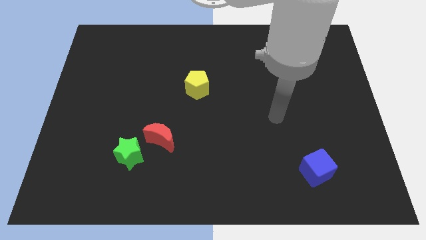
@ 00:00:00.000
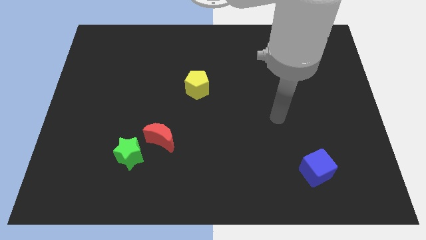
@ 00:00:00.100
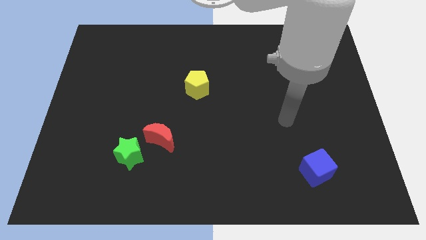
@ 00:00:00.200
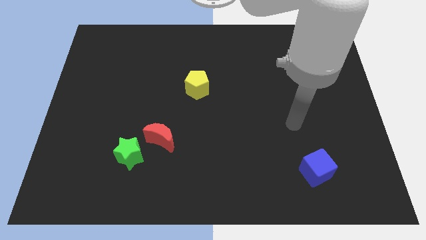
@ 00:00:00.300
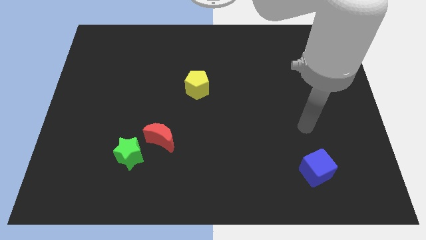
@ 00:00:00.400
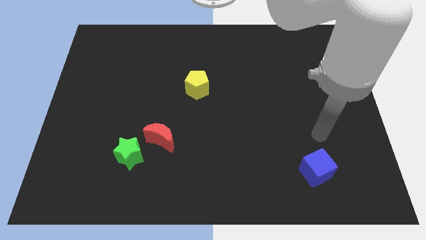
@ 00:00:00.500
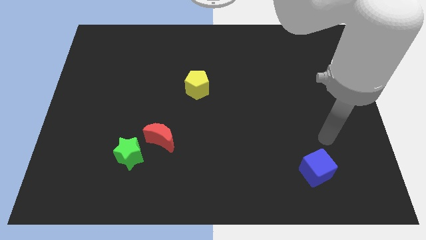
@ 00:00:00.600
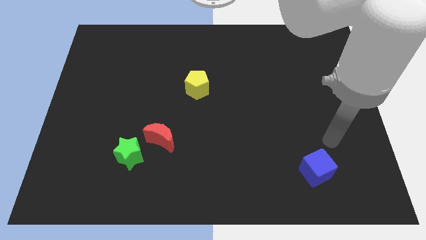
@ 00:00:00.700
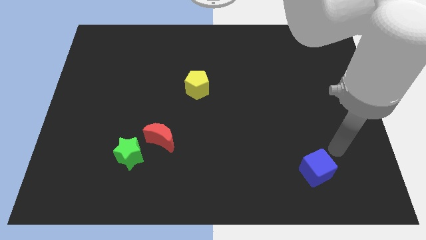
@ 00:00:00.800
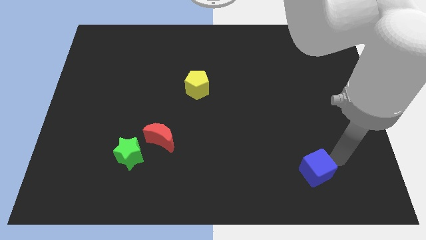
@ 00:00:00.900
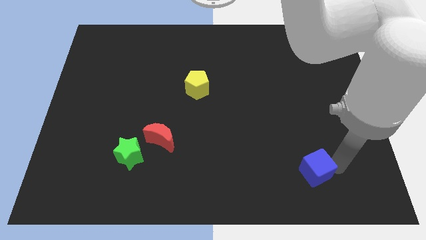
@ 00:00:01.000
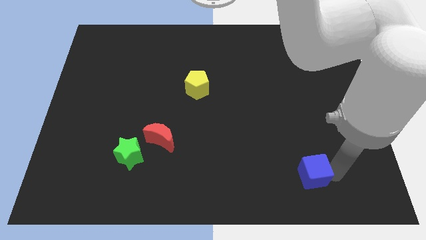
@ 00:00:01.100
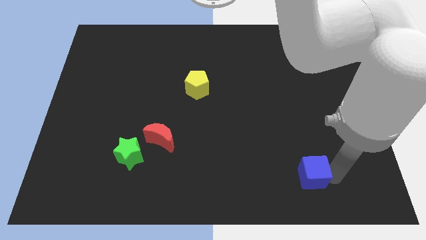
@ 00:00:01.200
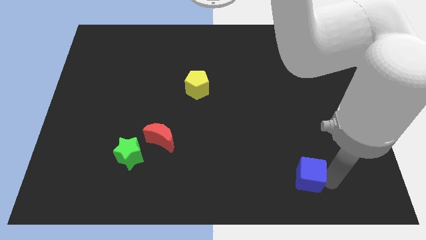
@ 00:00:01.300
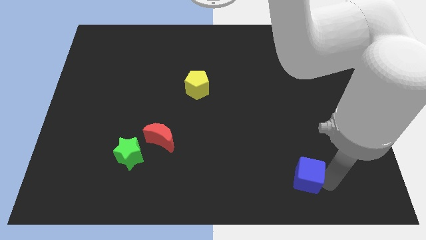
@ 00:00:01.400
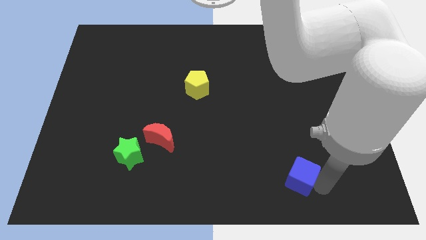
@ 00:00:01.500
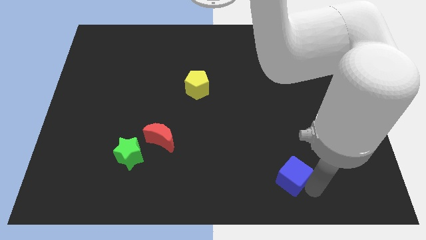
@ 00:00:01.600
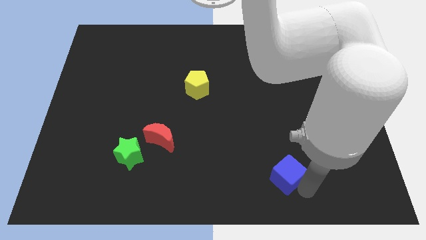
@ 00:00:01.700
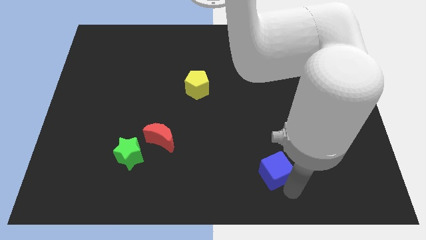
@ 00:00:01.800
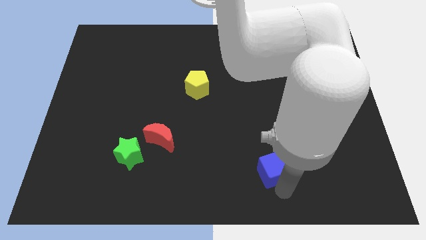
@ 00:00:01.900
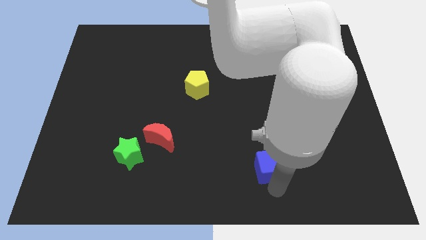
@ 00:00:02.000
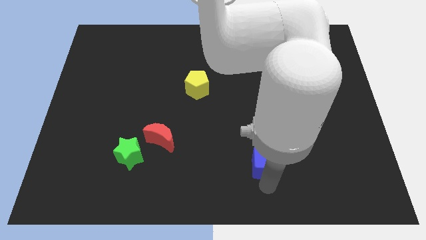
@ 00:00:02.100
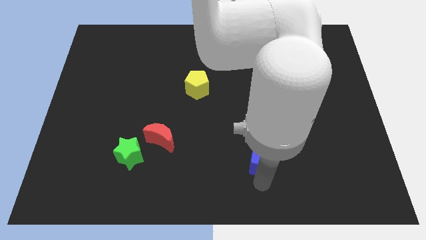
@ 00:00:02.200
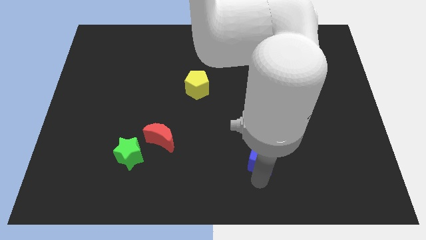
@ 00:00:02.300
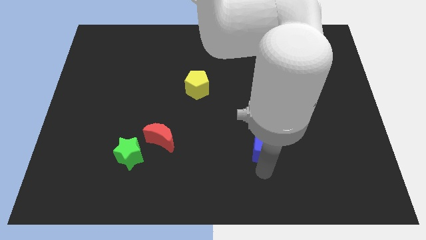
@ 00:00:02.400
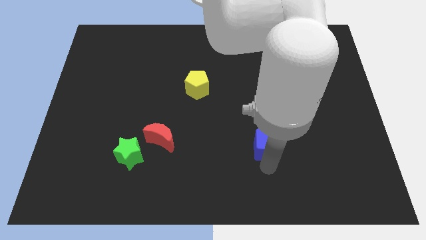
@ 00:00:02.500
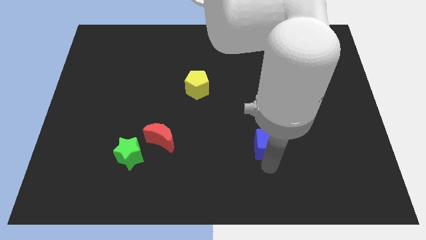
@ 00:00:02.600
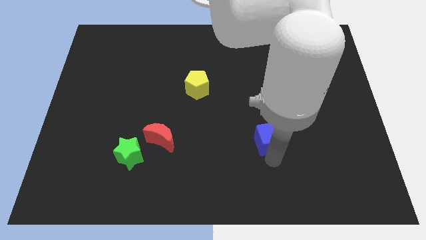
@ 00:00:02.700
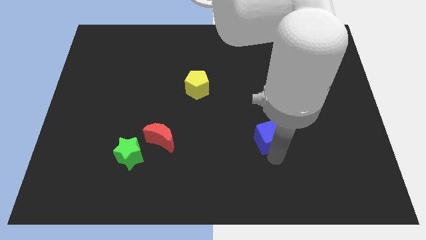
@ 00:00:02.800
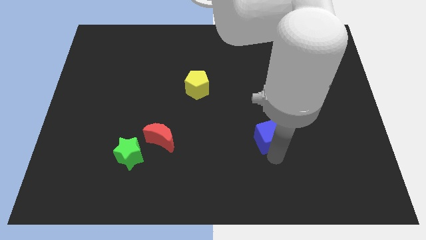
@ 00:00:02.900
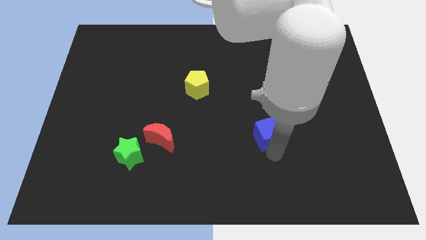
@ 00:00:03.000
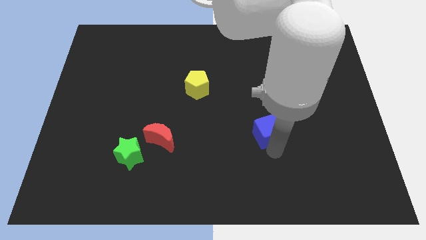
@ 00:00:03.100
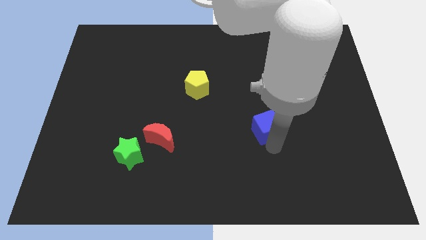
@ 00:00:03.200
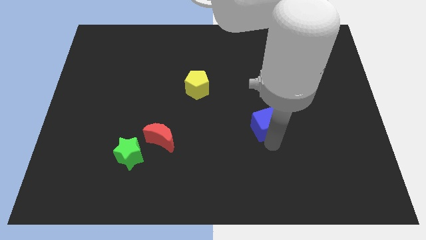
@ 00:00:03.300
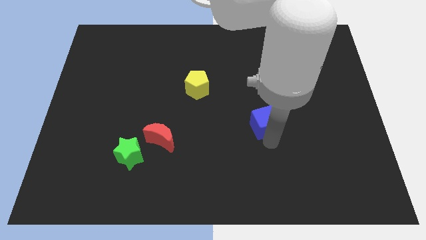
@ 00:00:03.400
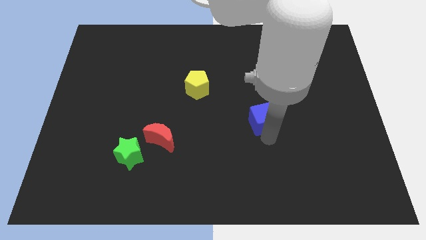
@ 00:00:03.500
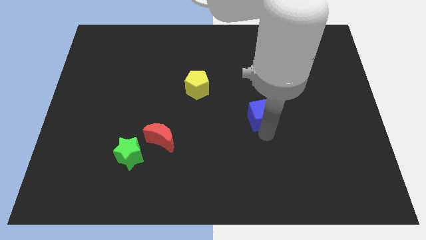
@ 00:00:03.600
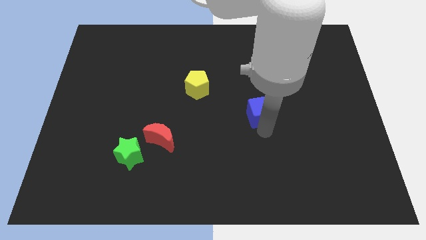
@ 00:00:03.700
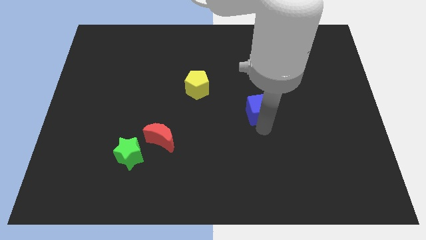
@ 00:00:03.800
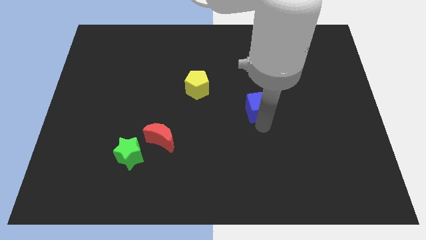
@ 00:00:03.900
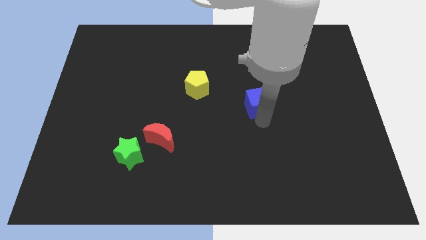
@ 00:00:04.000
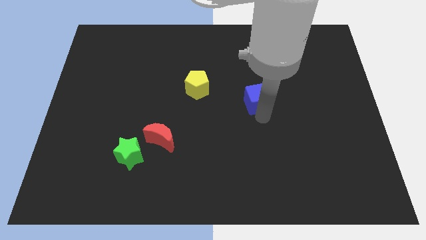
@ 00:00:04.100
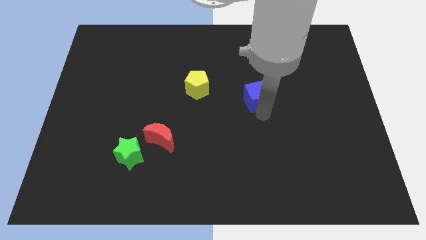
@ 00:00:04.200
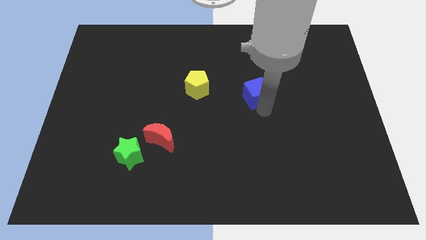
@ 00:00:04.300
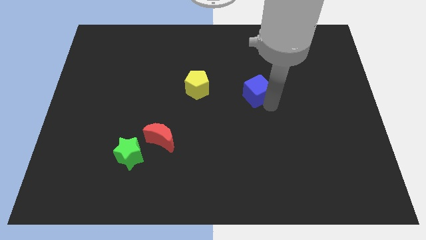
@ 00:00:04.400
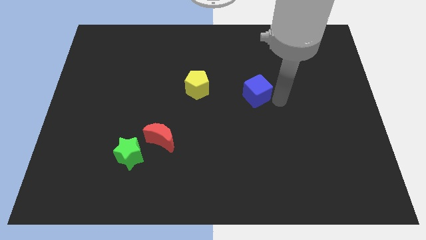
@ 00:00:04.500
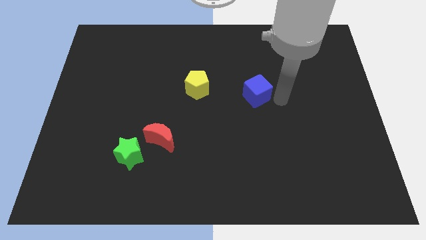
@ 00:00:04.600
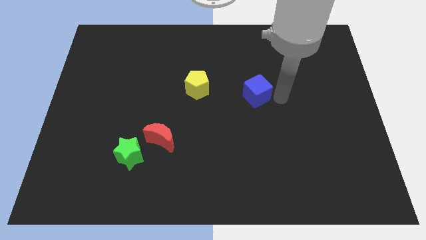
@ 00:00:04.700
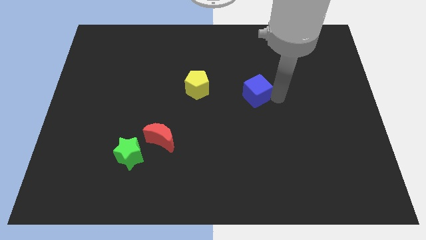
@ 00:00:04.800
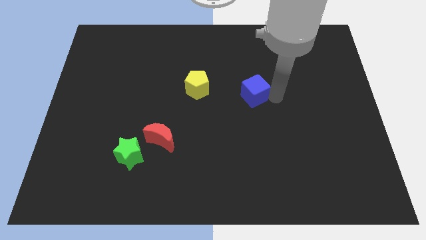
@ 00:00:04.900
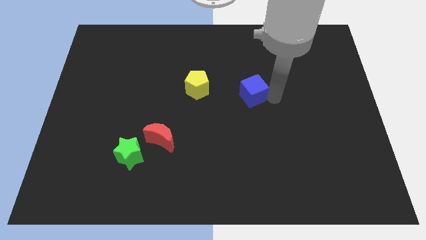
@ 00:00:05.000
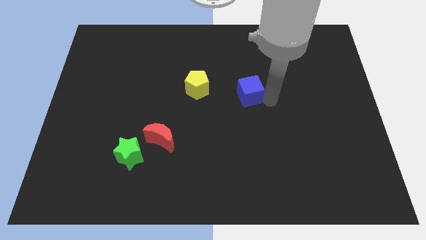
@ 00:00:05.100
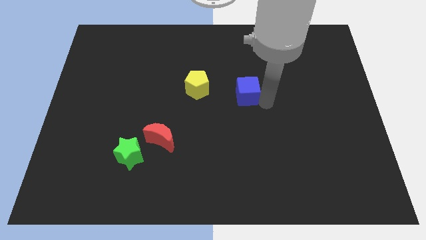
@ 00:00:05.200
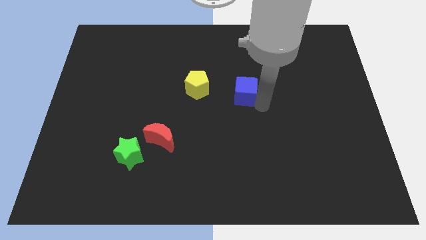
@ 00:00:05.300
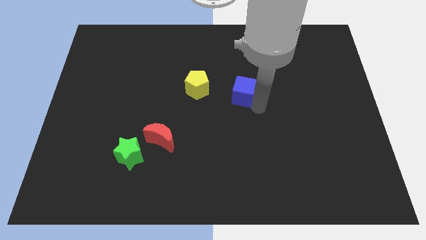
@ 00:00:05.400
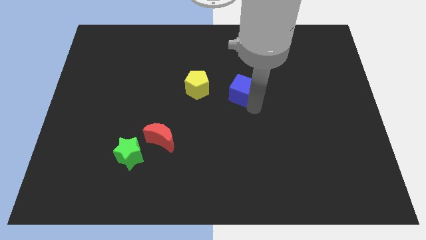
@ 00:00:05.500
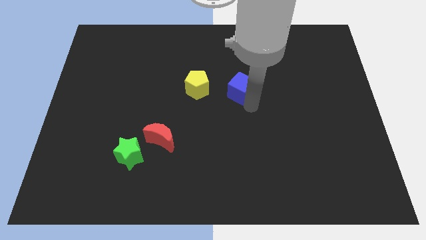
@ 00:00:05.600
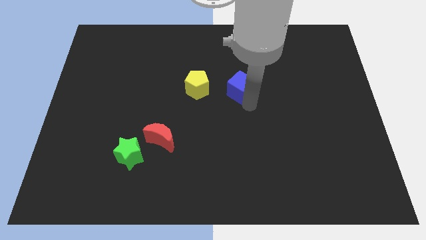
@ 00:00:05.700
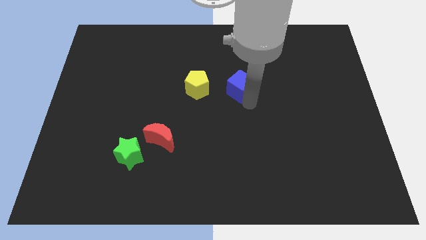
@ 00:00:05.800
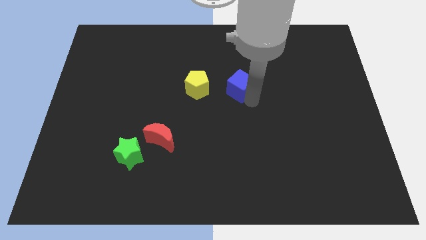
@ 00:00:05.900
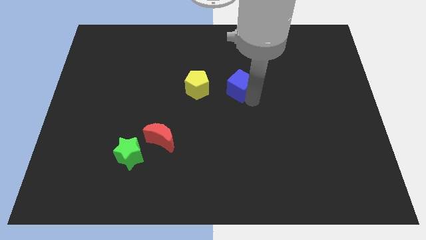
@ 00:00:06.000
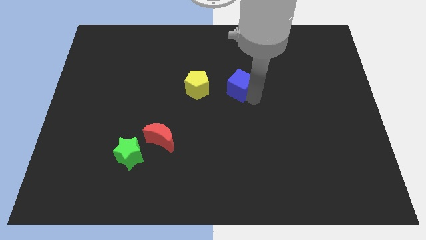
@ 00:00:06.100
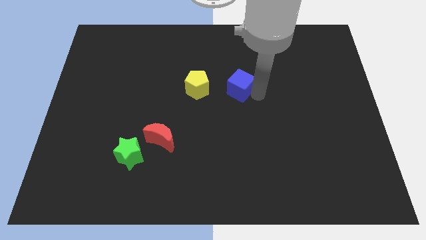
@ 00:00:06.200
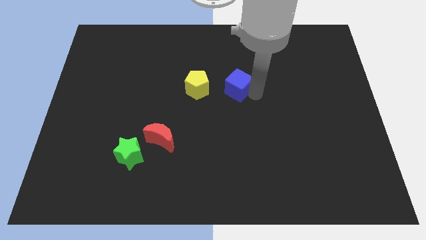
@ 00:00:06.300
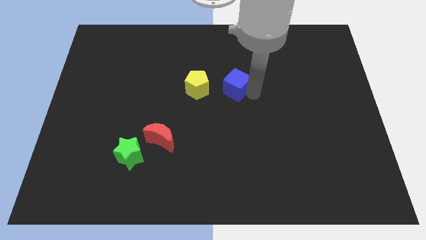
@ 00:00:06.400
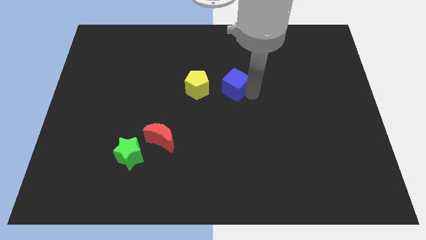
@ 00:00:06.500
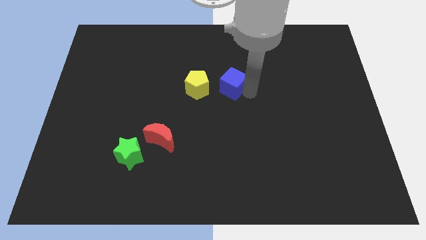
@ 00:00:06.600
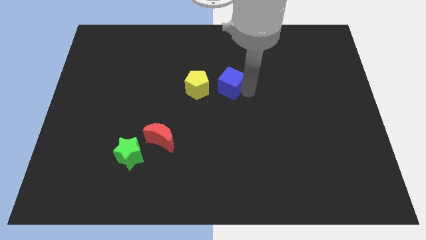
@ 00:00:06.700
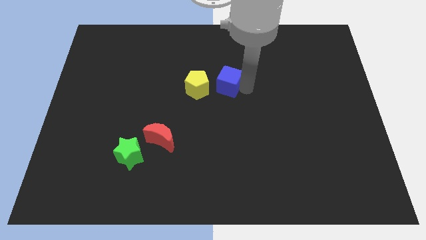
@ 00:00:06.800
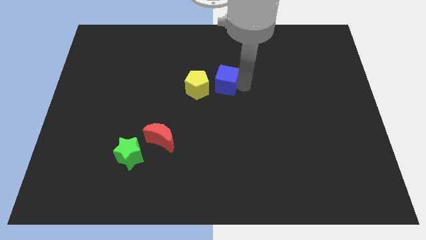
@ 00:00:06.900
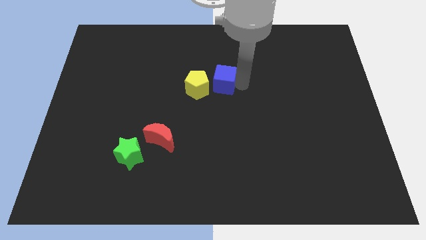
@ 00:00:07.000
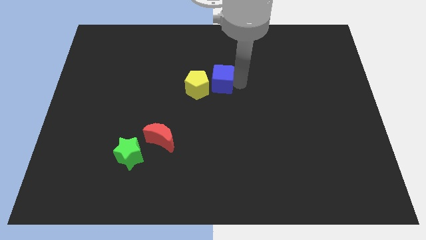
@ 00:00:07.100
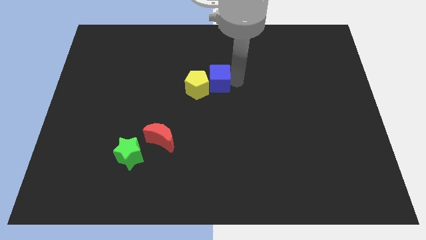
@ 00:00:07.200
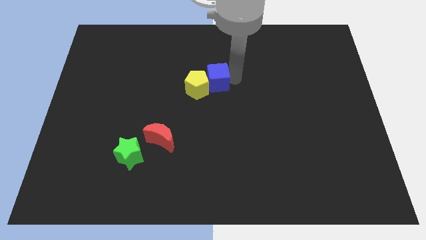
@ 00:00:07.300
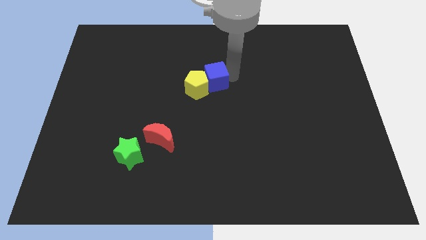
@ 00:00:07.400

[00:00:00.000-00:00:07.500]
push the blue block towards the yellow block

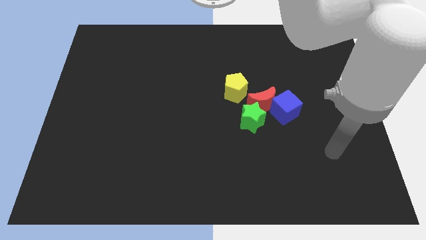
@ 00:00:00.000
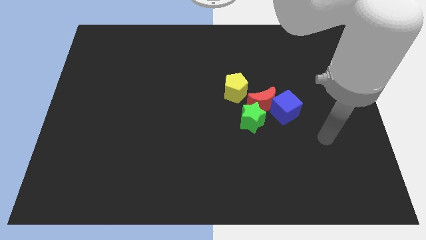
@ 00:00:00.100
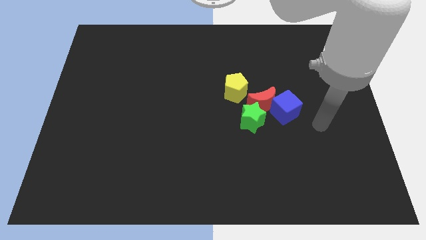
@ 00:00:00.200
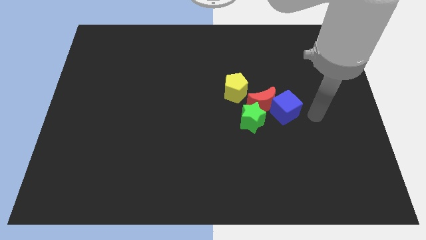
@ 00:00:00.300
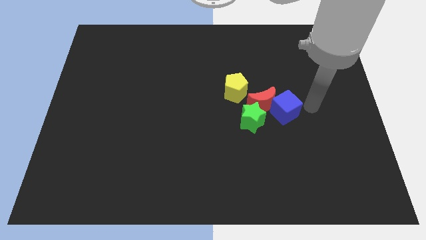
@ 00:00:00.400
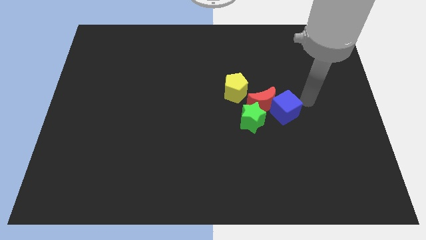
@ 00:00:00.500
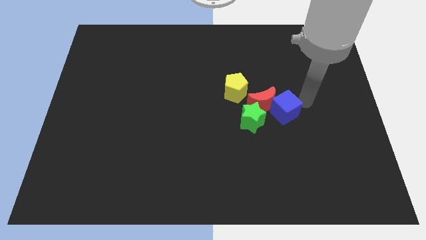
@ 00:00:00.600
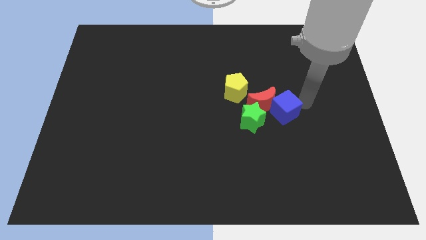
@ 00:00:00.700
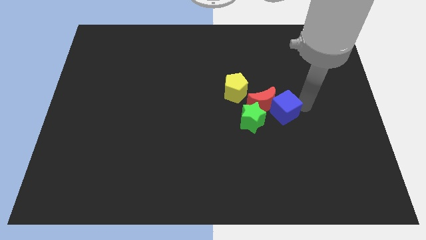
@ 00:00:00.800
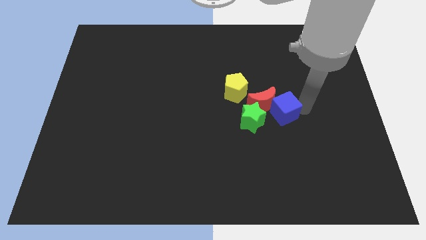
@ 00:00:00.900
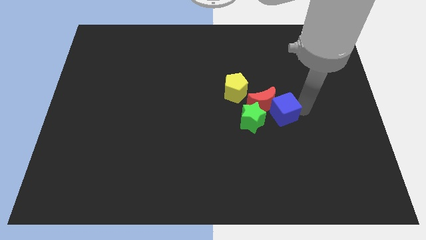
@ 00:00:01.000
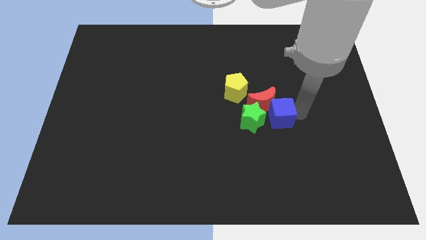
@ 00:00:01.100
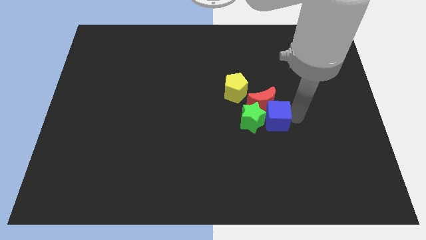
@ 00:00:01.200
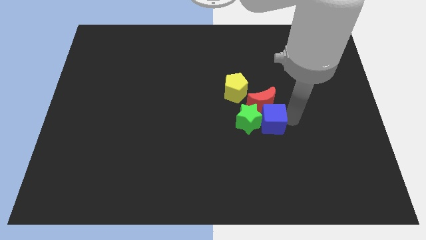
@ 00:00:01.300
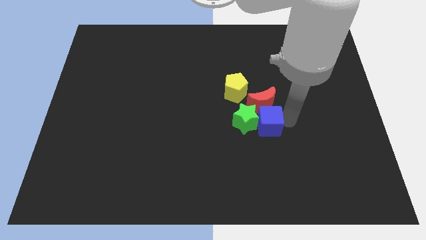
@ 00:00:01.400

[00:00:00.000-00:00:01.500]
push the blue cube close to the star
